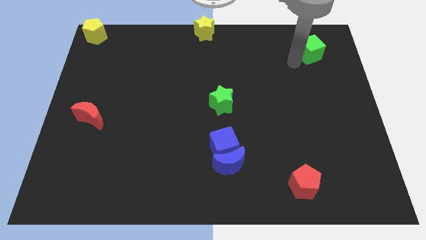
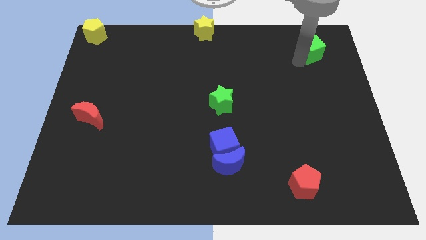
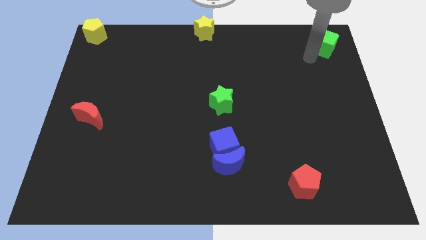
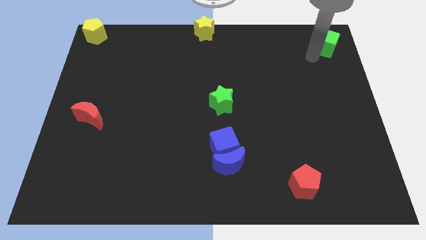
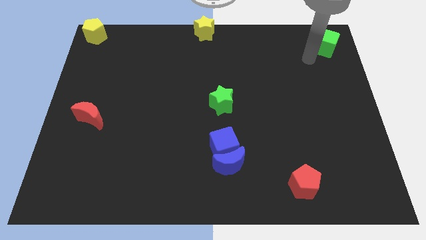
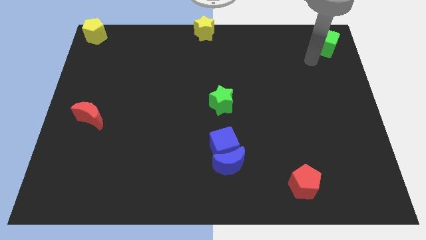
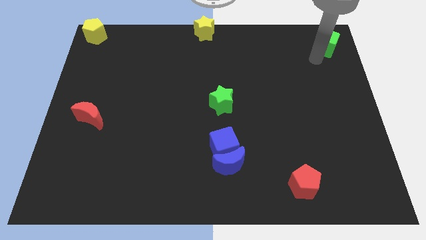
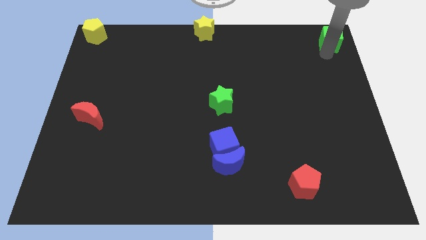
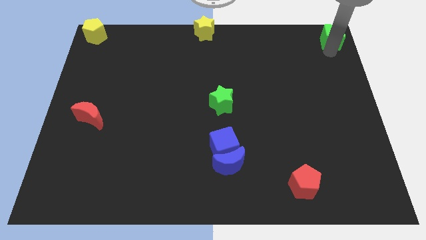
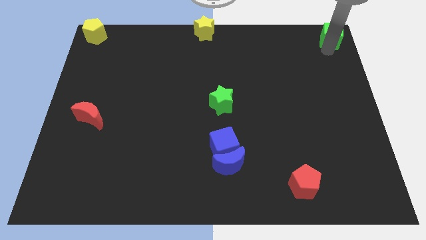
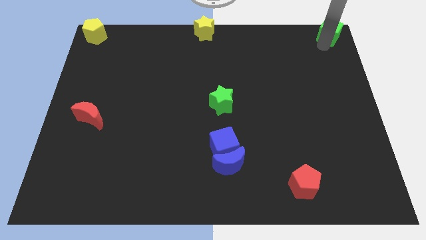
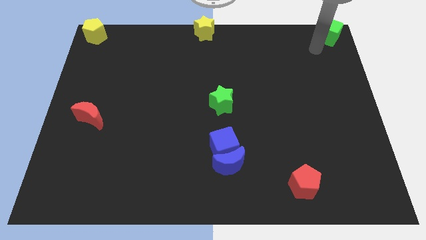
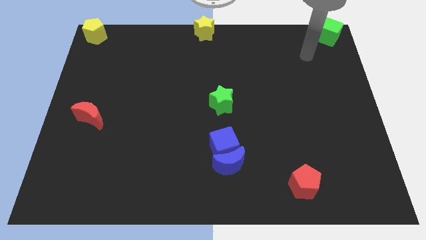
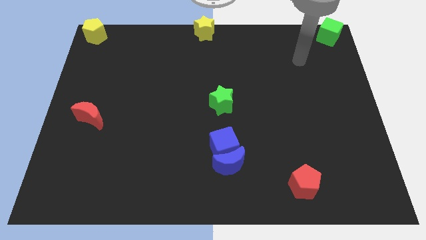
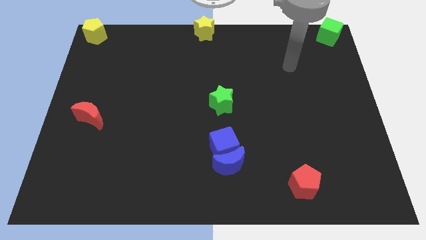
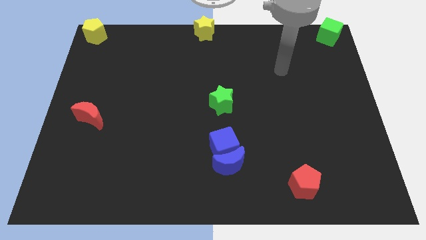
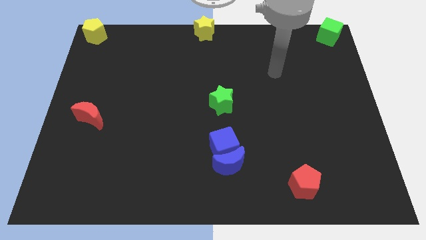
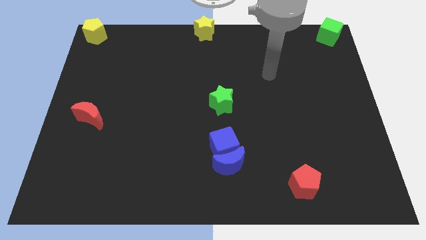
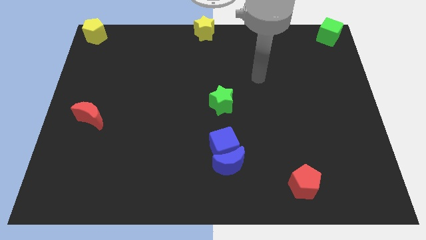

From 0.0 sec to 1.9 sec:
move the green cube to the top right corner of the board

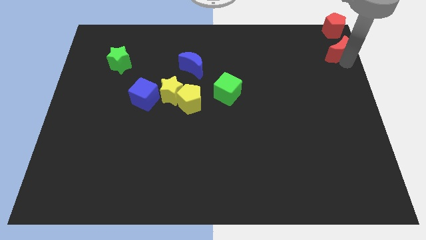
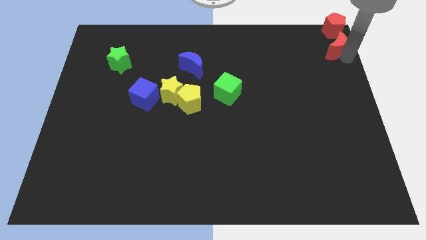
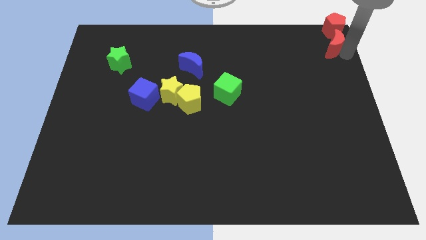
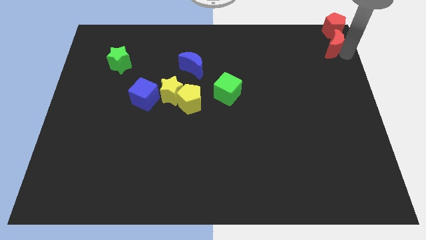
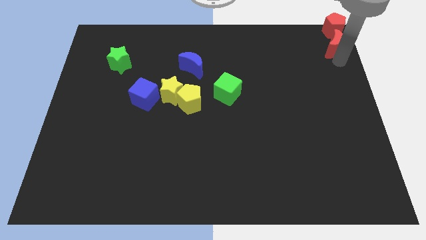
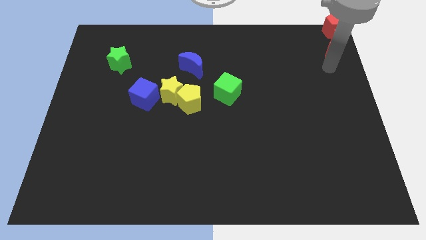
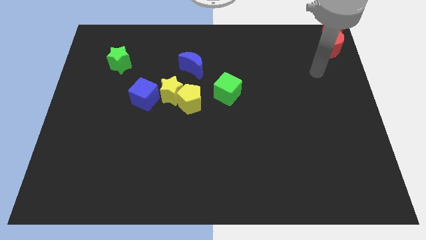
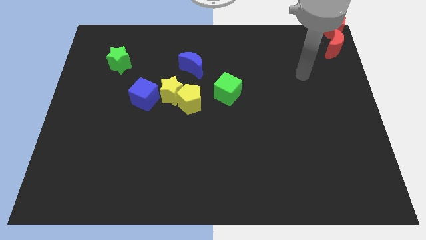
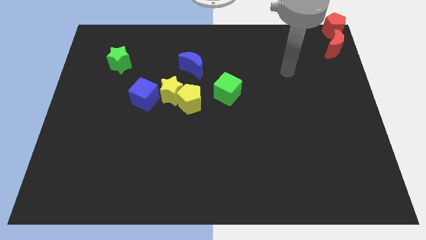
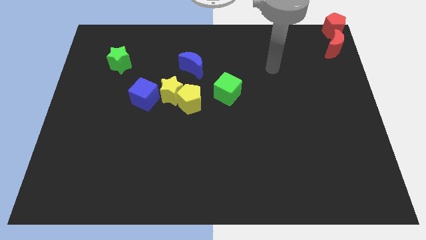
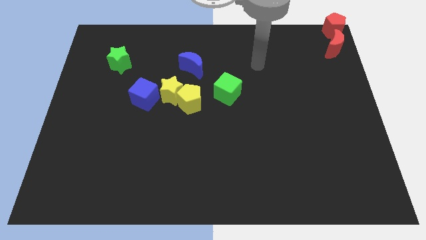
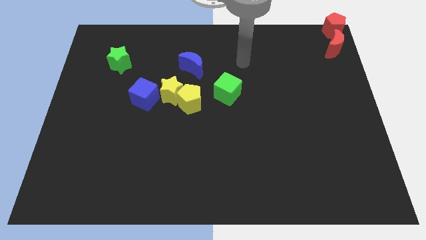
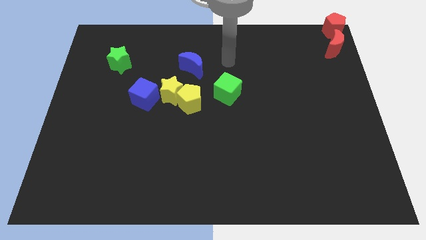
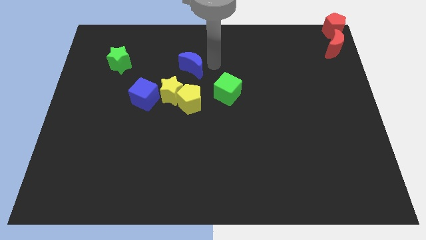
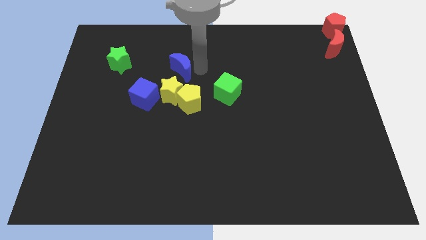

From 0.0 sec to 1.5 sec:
touch the arm to the right of the blue moon

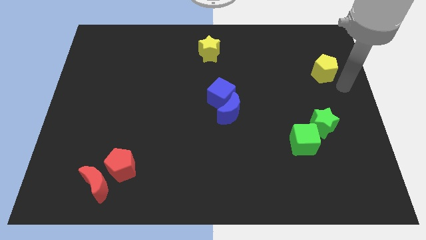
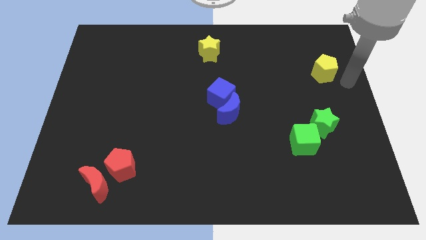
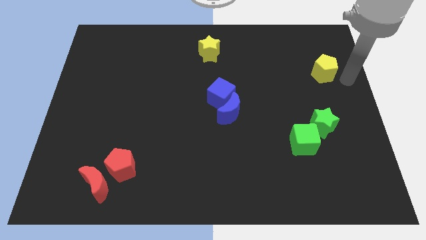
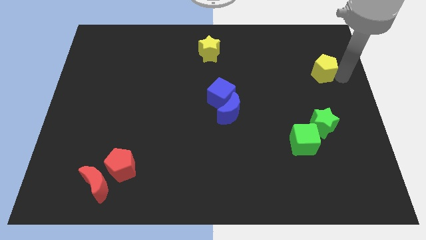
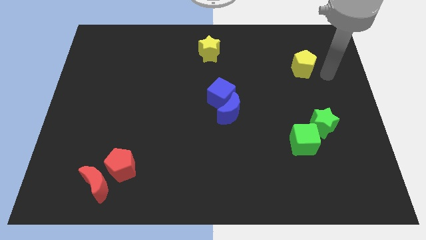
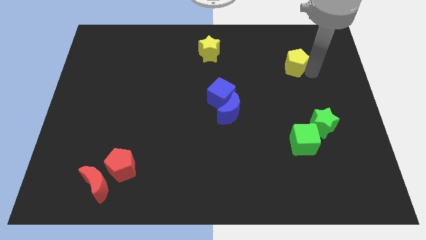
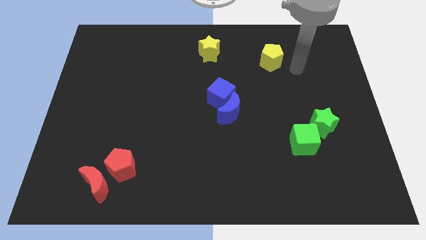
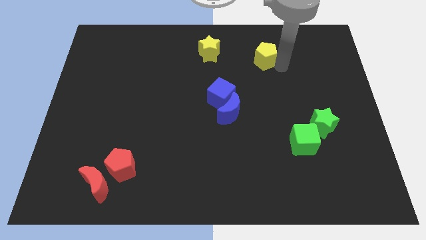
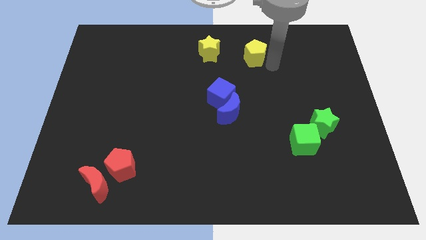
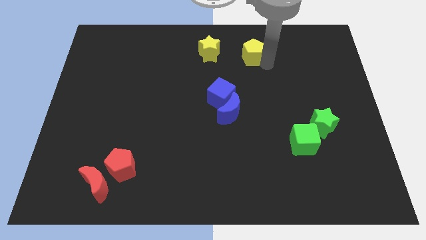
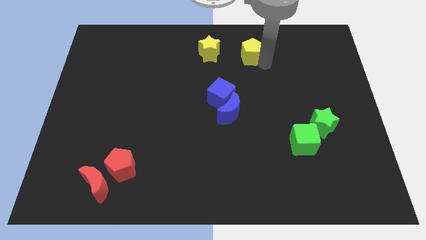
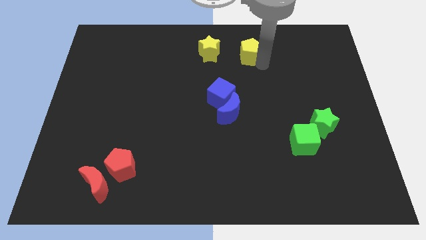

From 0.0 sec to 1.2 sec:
push the yellow pentagon to the right side of the yellow star

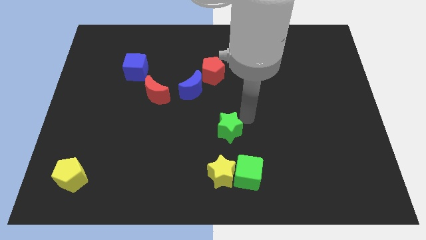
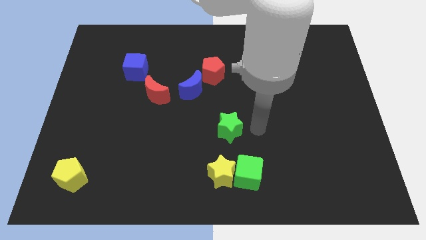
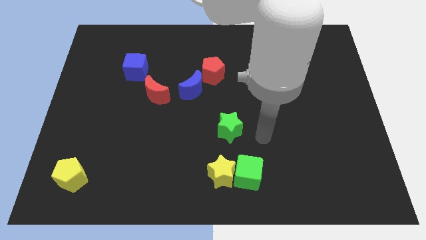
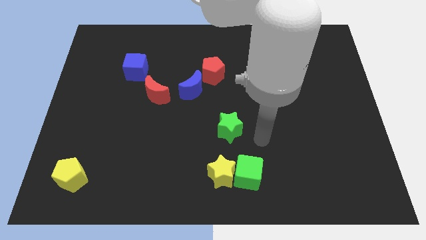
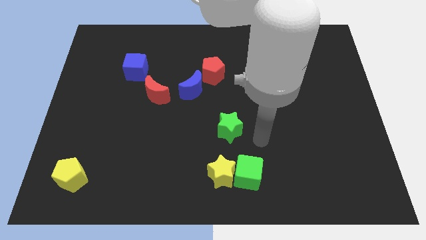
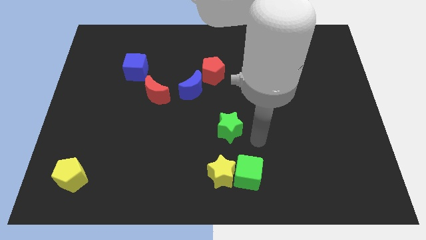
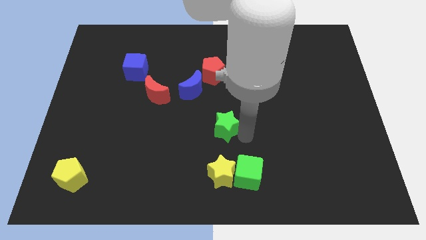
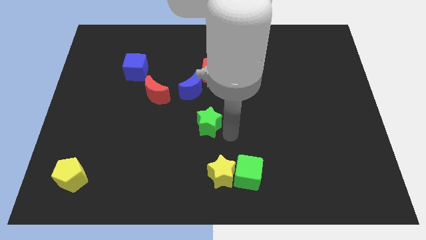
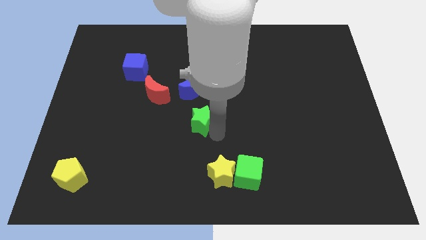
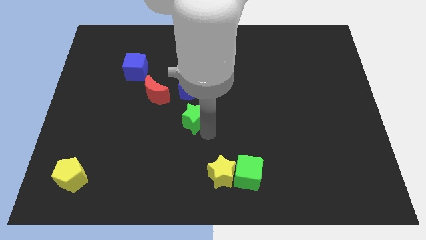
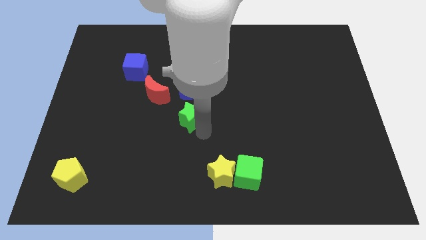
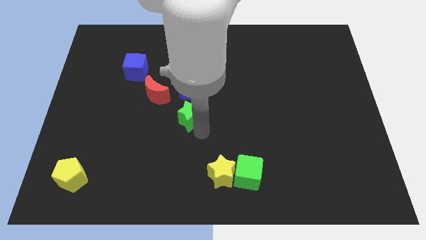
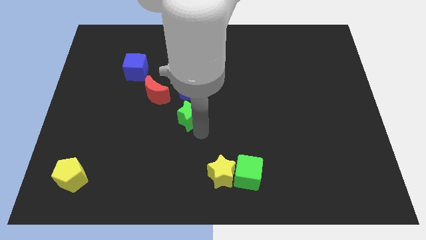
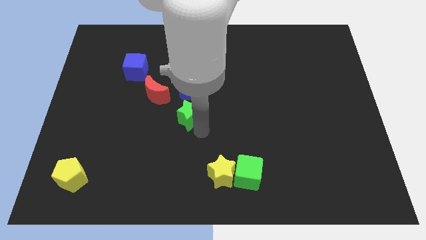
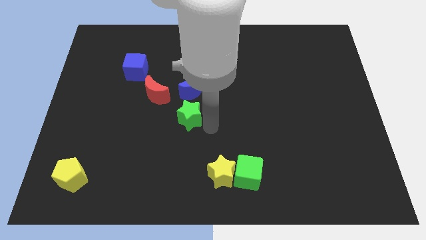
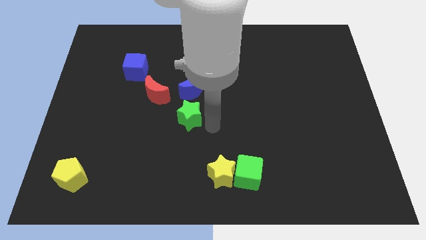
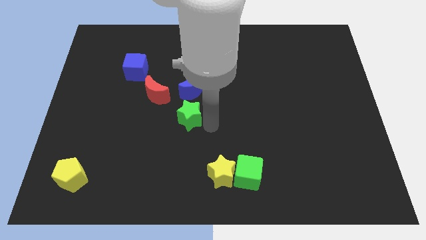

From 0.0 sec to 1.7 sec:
place the green star to the bottom side of the blue crescent

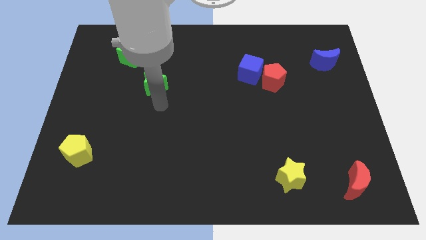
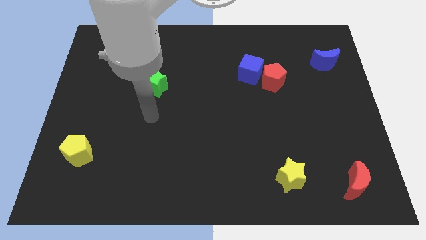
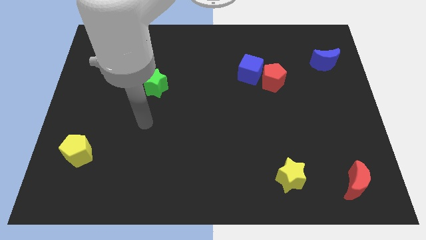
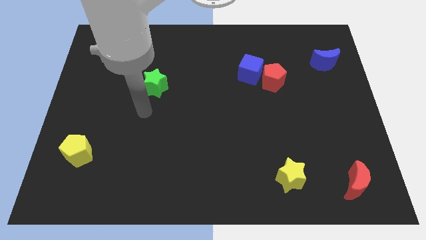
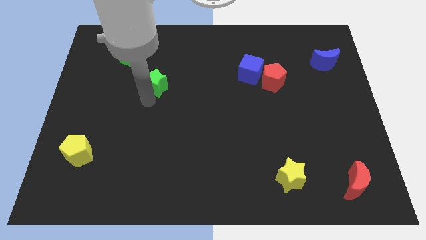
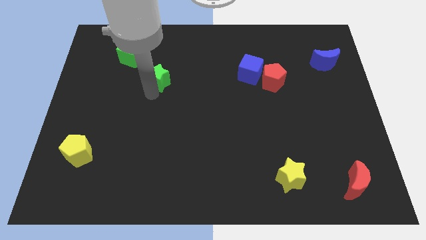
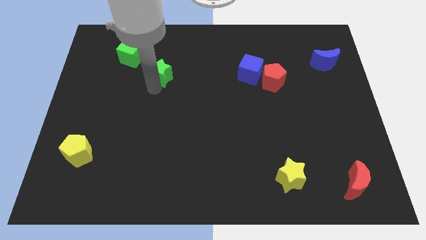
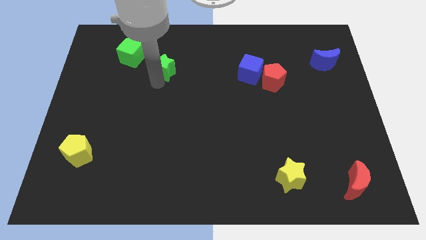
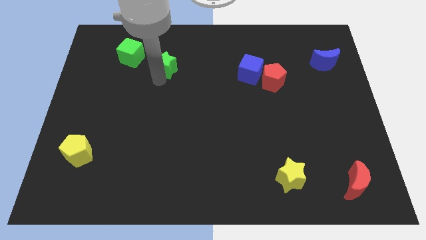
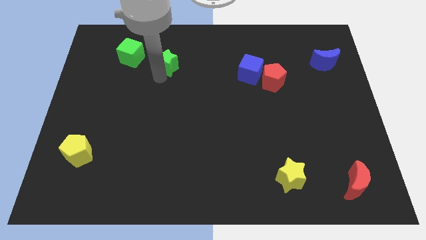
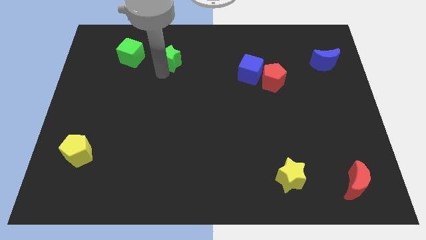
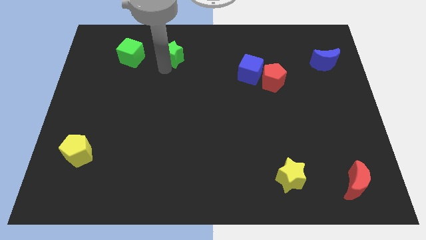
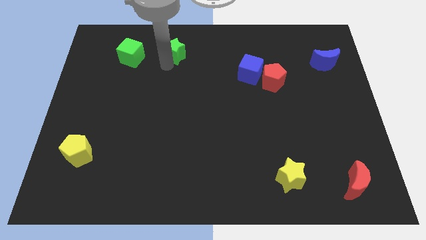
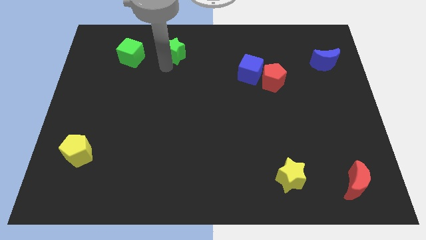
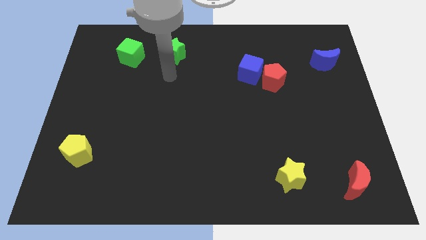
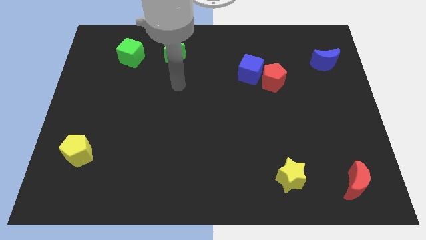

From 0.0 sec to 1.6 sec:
move the green star to the right side of the green cube

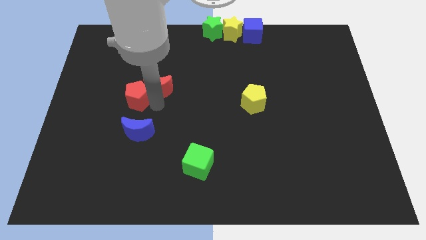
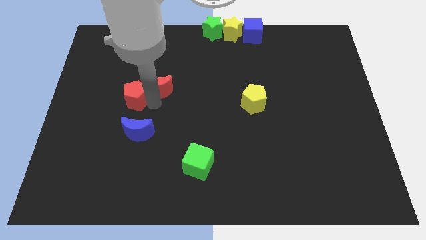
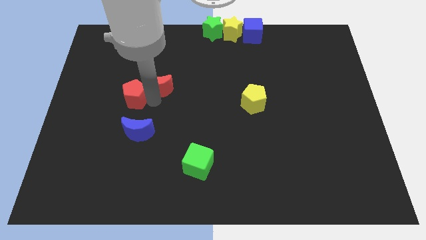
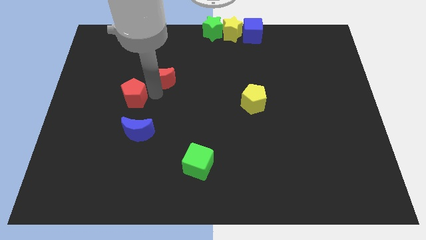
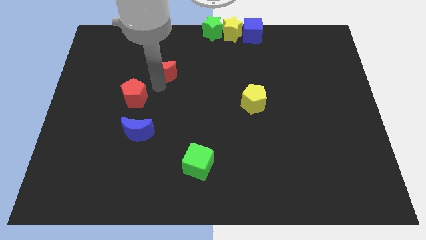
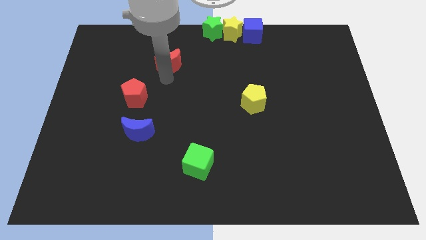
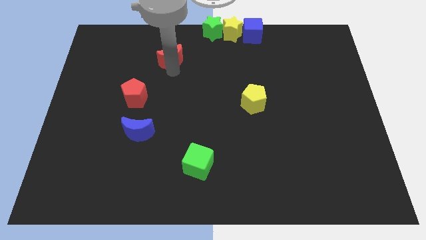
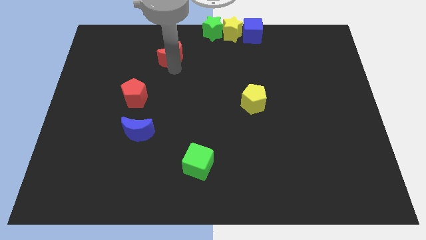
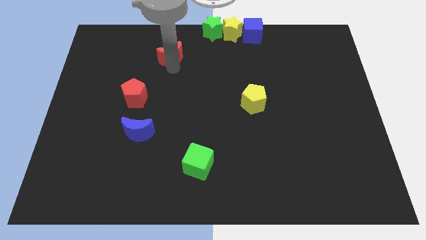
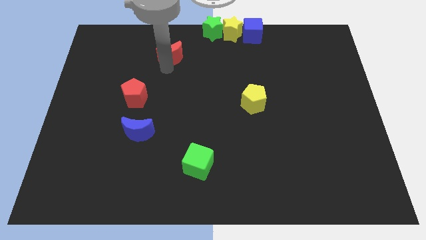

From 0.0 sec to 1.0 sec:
move red moon towards center top
